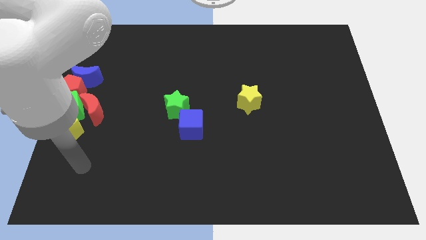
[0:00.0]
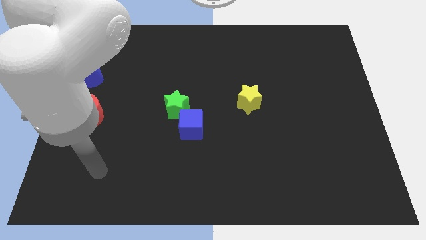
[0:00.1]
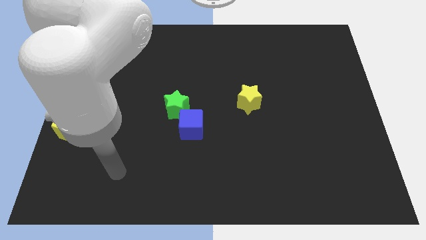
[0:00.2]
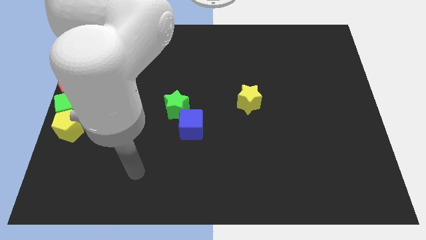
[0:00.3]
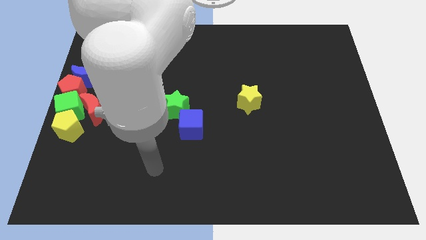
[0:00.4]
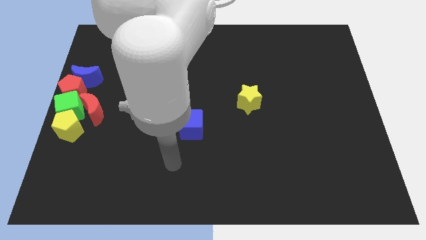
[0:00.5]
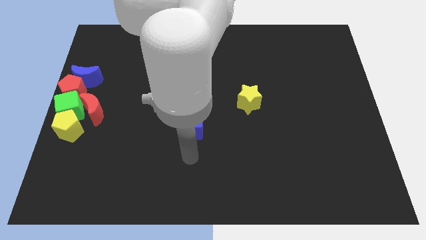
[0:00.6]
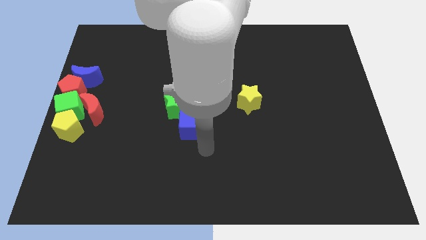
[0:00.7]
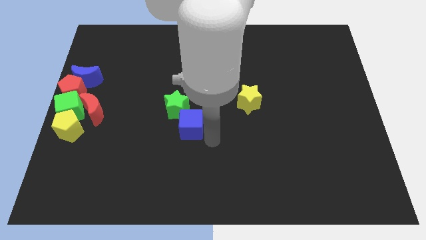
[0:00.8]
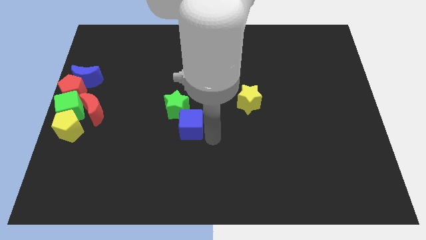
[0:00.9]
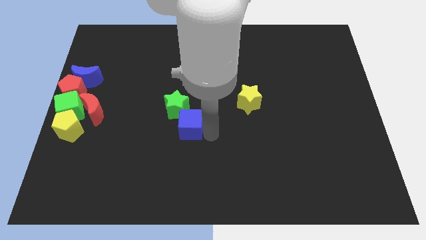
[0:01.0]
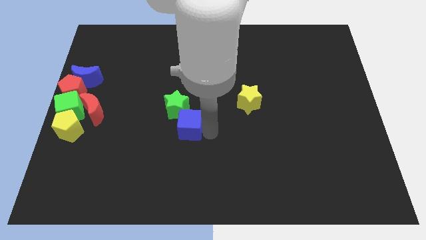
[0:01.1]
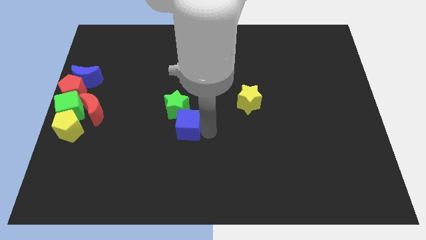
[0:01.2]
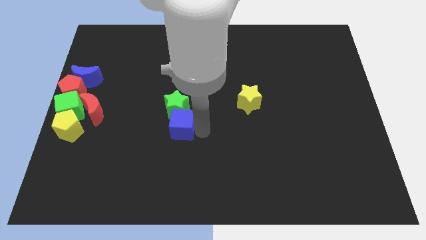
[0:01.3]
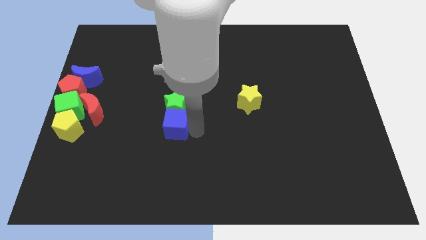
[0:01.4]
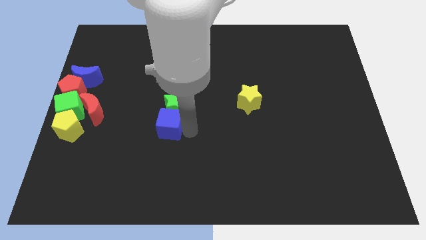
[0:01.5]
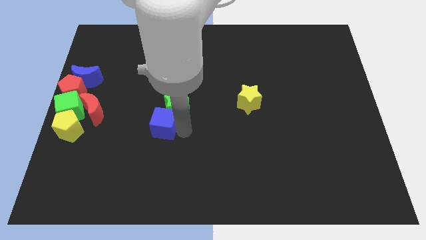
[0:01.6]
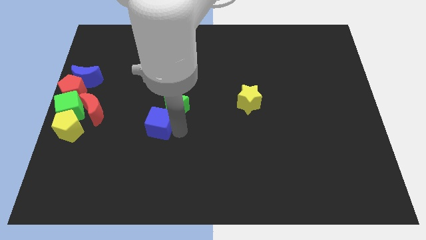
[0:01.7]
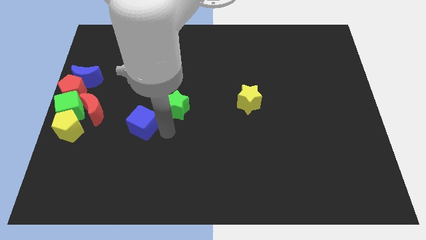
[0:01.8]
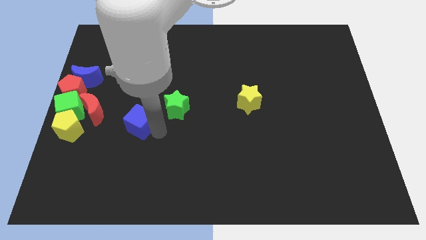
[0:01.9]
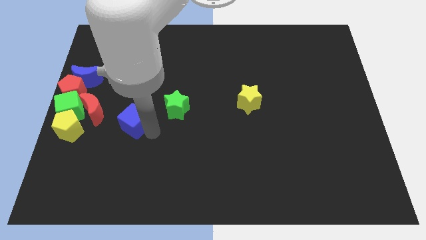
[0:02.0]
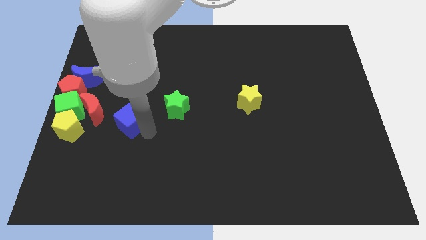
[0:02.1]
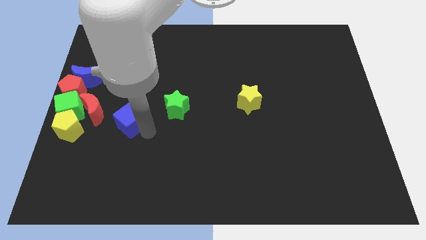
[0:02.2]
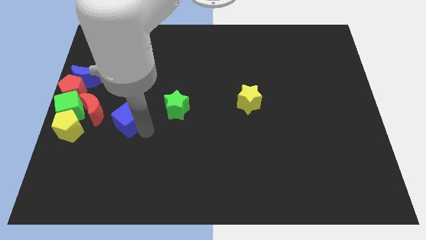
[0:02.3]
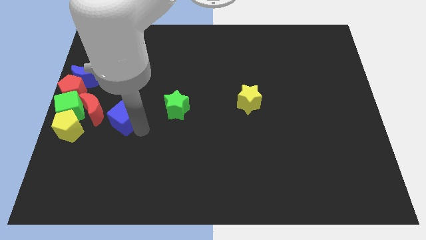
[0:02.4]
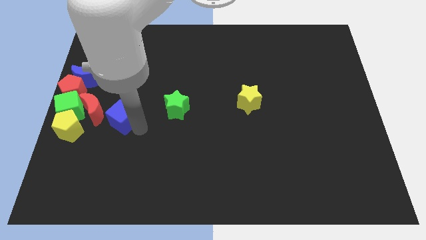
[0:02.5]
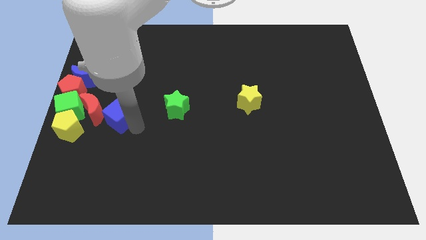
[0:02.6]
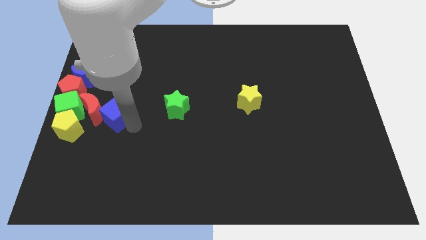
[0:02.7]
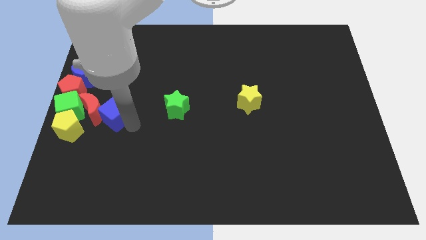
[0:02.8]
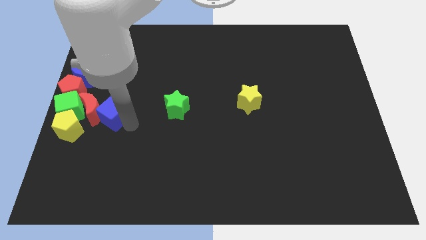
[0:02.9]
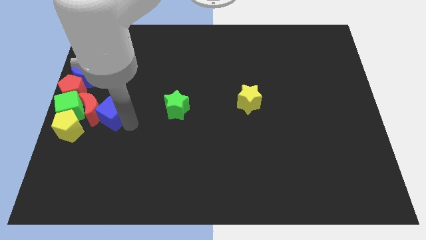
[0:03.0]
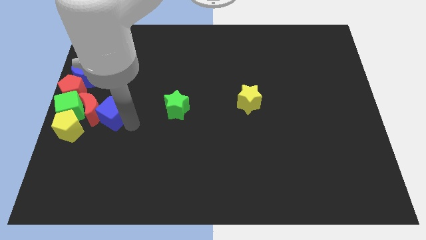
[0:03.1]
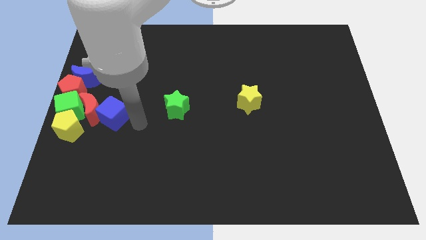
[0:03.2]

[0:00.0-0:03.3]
push the blue cube to the right side of the red crescent

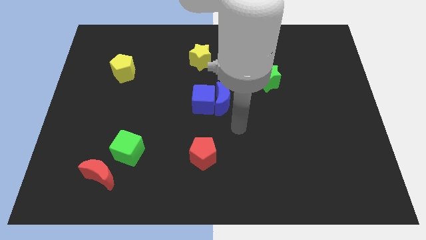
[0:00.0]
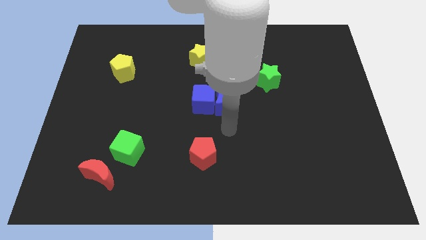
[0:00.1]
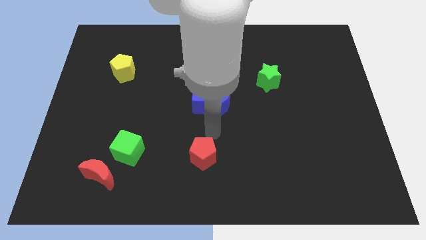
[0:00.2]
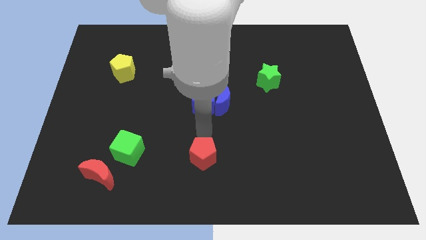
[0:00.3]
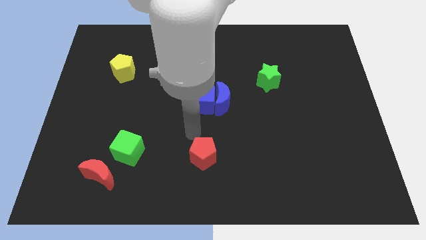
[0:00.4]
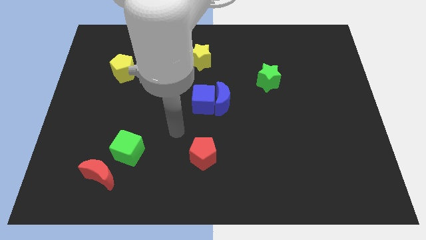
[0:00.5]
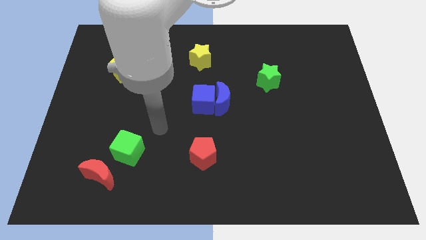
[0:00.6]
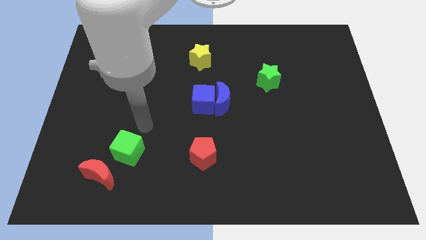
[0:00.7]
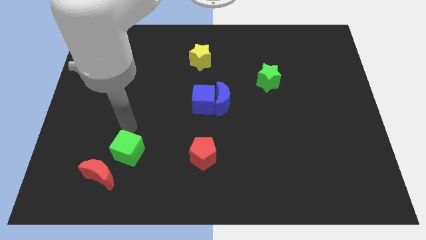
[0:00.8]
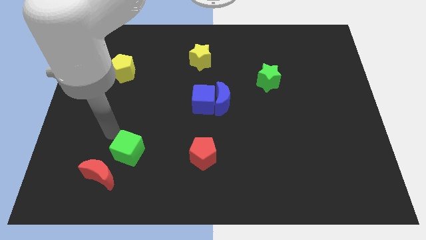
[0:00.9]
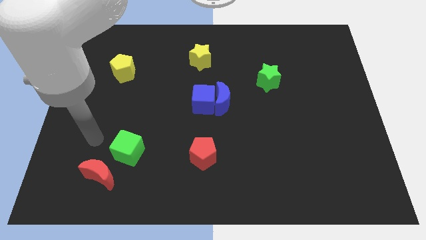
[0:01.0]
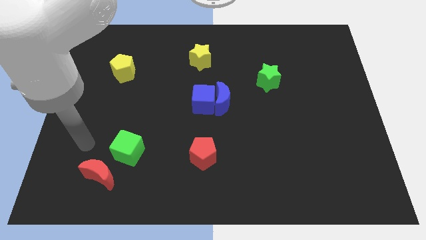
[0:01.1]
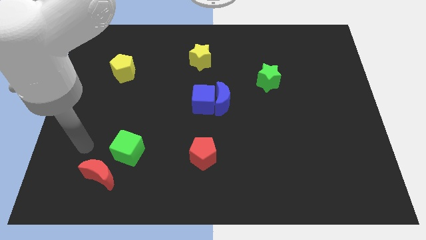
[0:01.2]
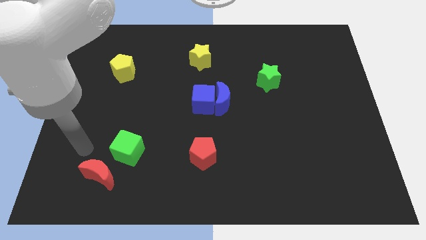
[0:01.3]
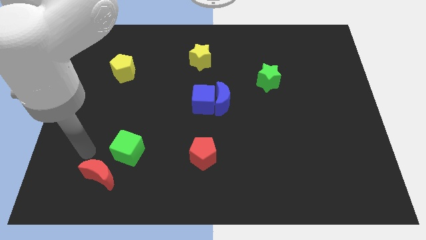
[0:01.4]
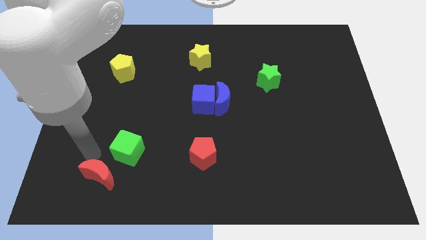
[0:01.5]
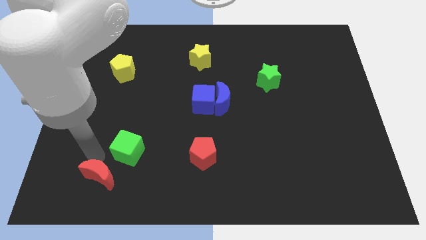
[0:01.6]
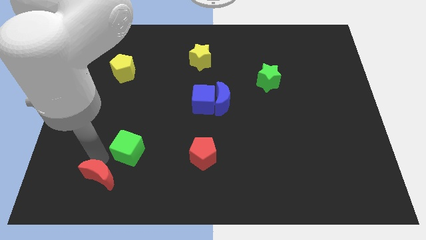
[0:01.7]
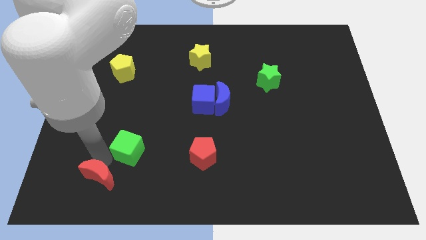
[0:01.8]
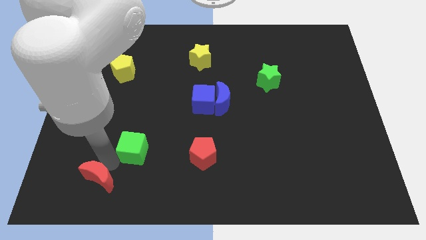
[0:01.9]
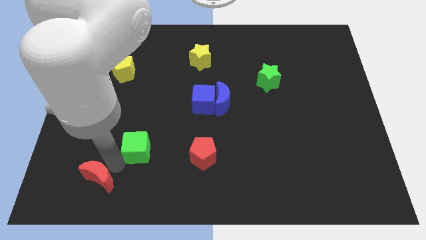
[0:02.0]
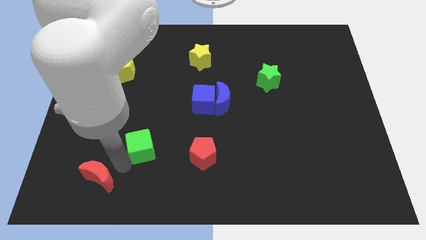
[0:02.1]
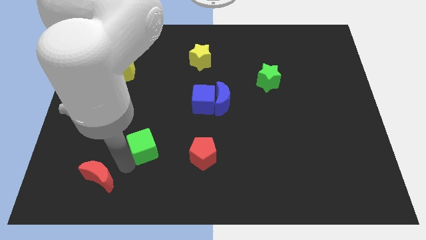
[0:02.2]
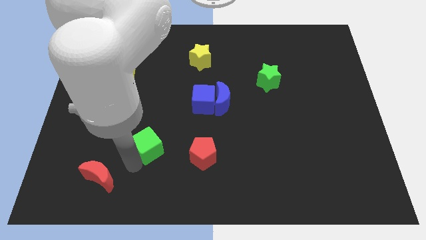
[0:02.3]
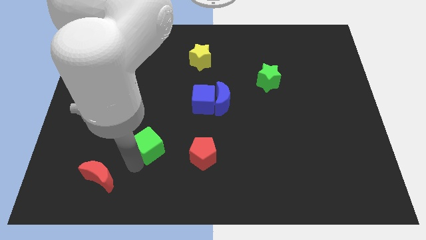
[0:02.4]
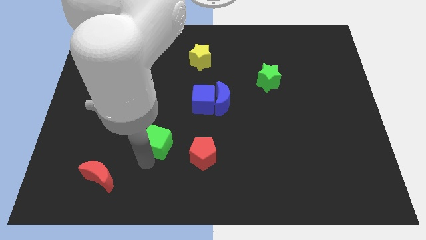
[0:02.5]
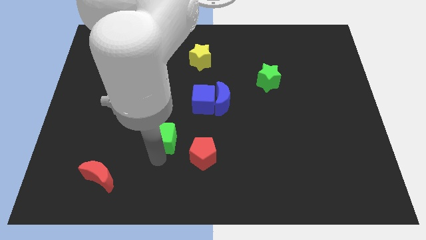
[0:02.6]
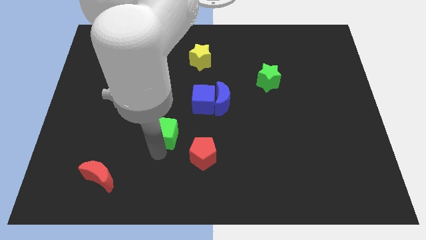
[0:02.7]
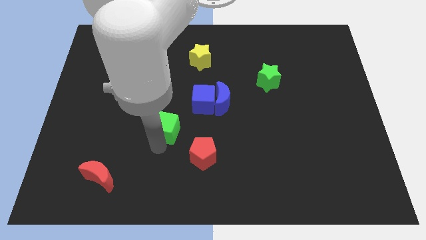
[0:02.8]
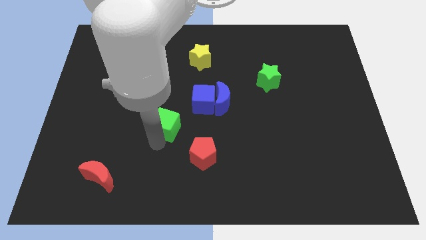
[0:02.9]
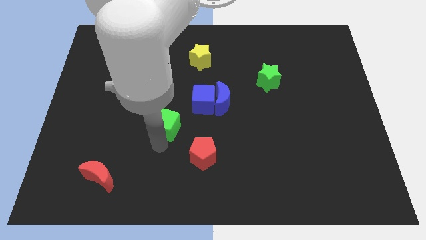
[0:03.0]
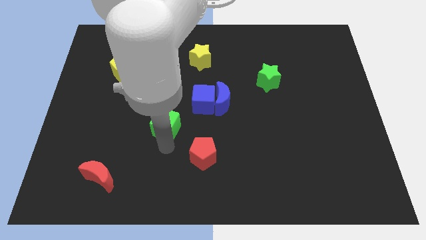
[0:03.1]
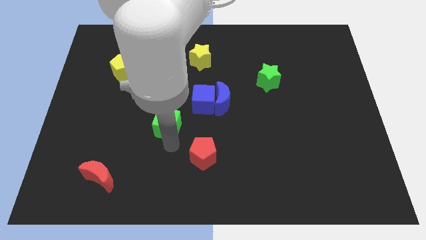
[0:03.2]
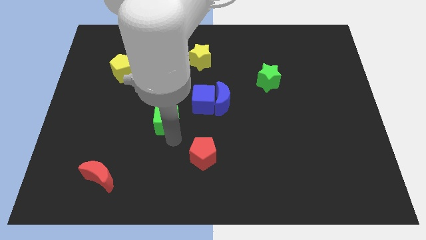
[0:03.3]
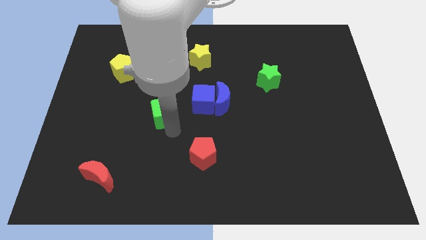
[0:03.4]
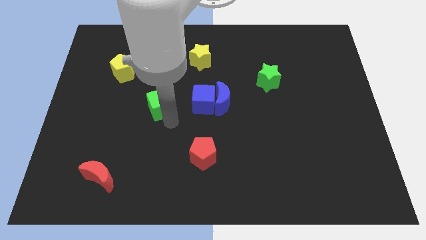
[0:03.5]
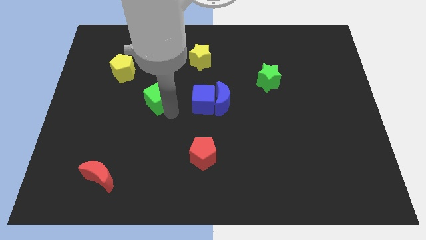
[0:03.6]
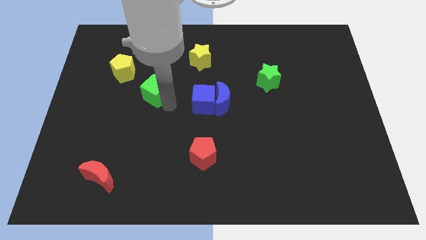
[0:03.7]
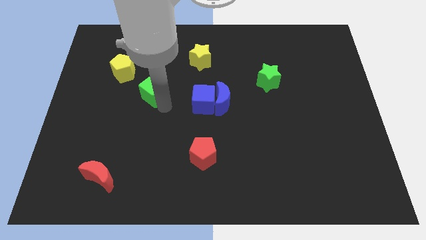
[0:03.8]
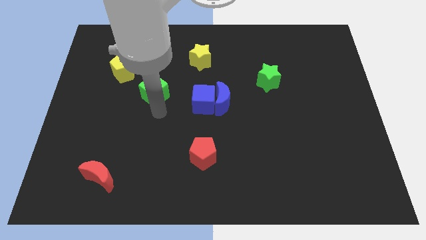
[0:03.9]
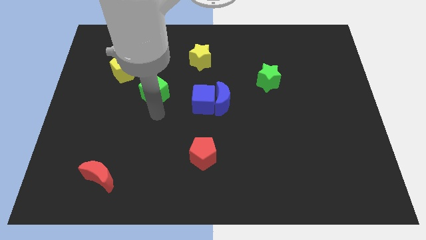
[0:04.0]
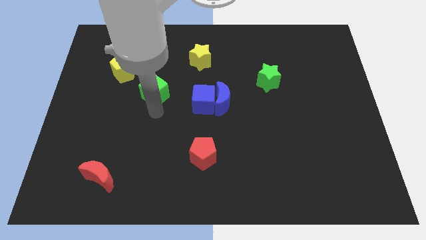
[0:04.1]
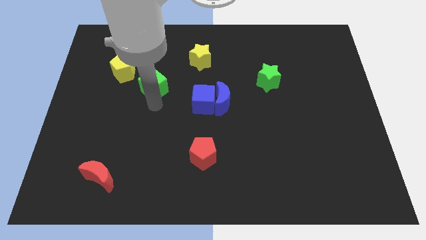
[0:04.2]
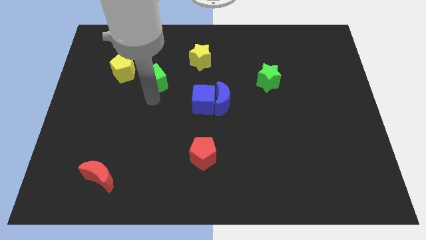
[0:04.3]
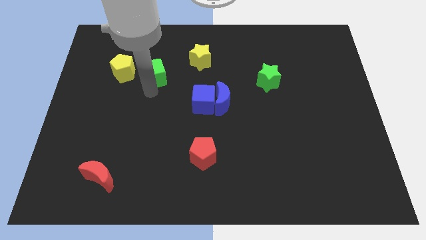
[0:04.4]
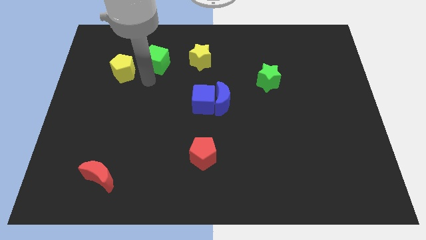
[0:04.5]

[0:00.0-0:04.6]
slide the green cube to the right side of the yellow pentagon

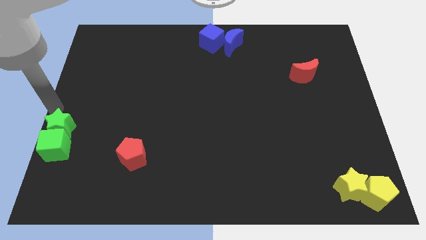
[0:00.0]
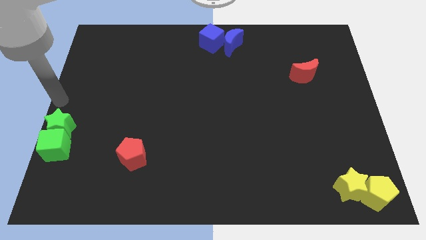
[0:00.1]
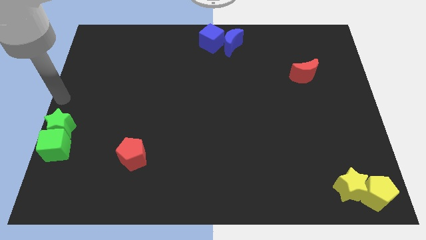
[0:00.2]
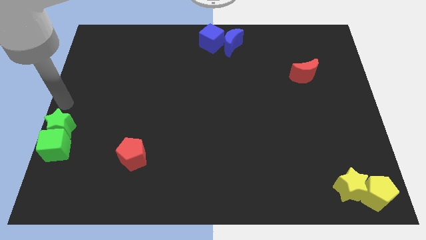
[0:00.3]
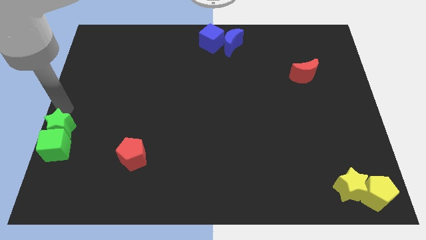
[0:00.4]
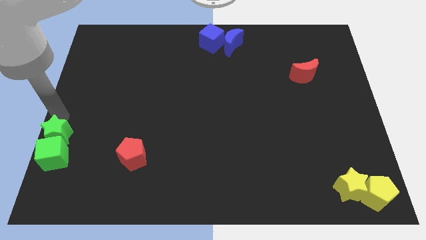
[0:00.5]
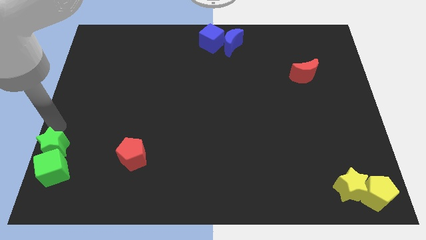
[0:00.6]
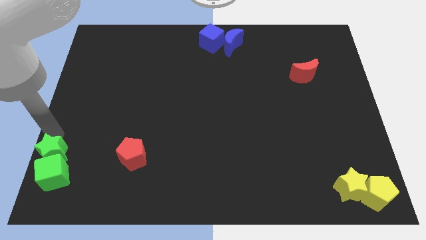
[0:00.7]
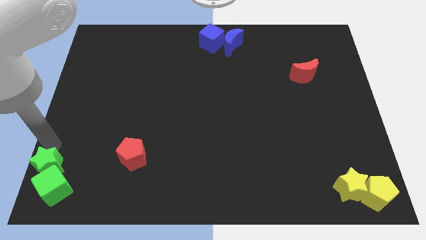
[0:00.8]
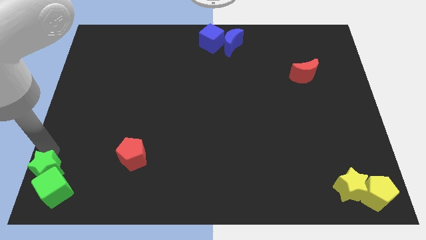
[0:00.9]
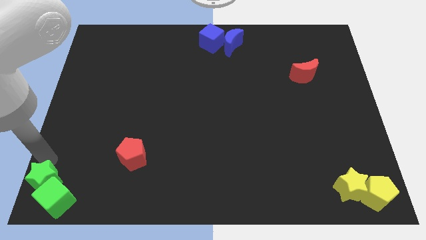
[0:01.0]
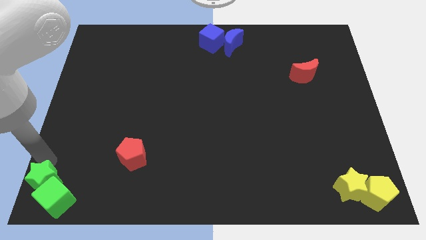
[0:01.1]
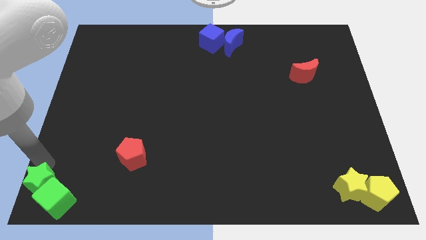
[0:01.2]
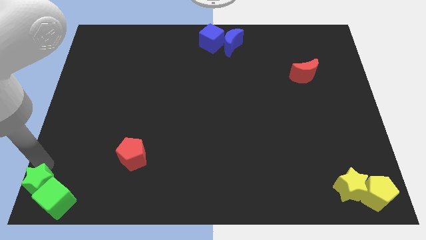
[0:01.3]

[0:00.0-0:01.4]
push the green star along with green cube towards the bottom left
